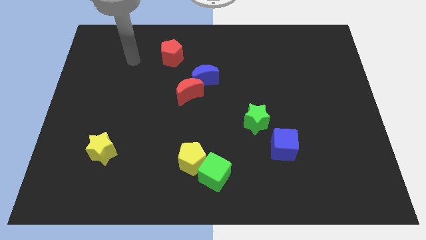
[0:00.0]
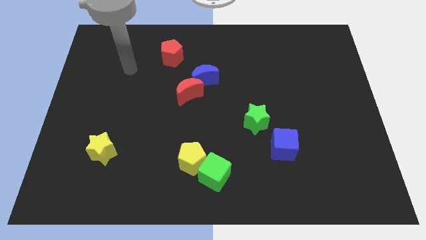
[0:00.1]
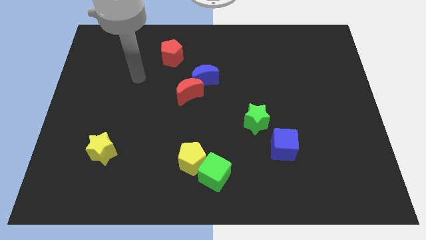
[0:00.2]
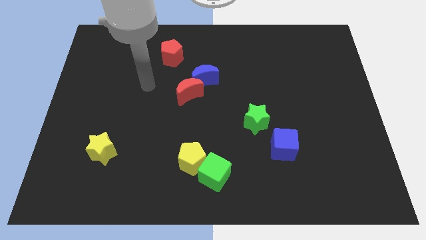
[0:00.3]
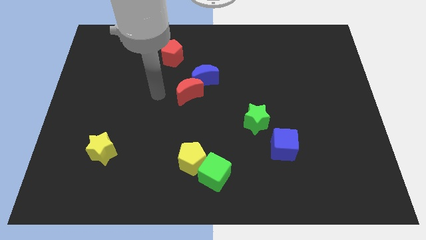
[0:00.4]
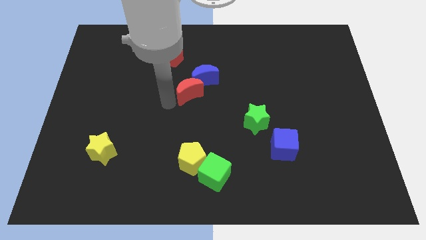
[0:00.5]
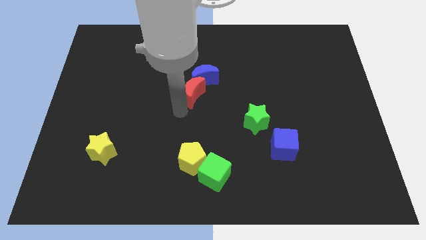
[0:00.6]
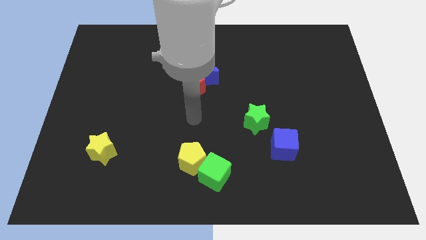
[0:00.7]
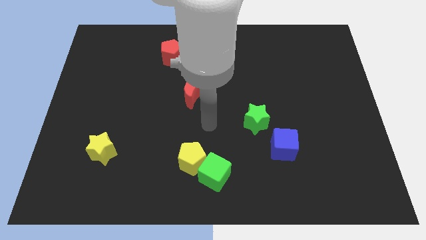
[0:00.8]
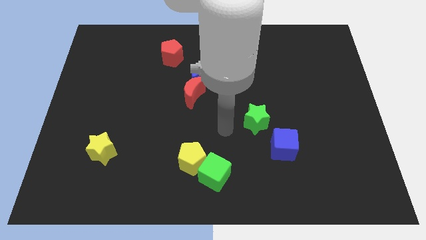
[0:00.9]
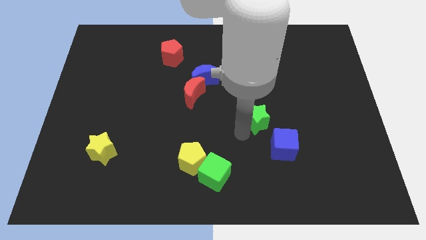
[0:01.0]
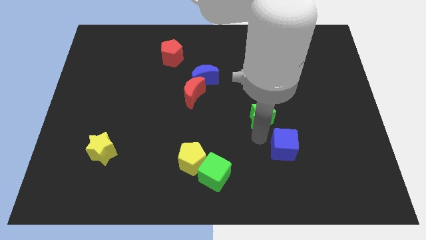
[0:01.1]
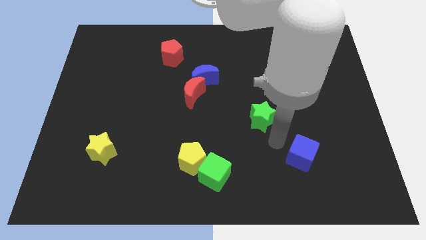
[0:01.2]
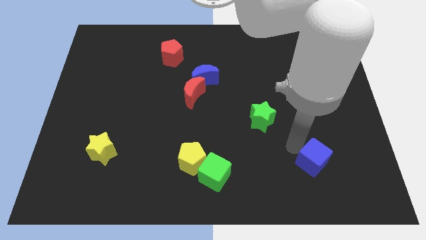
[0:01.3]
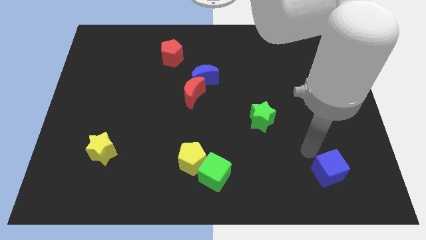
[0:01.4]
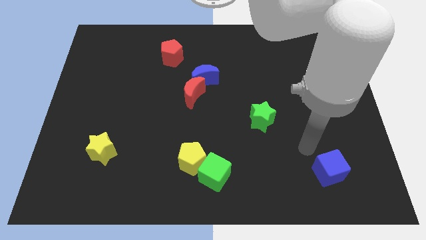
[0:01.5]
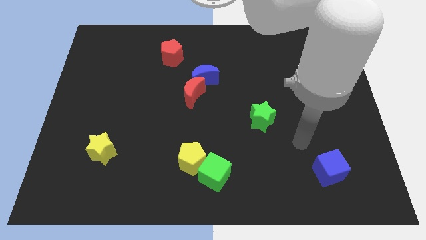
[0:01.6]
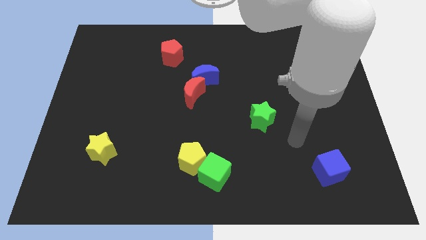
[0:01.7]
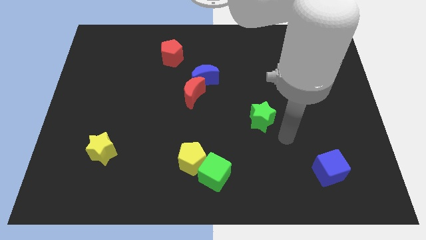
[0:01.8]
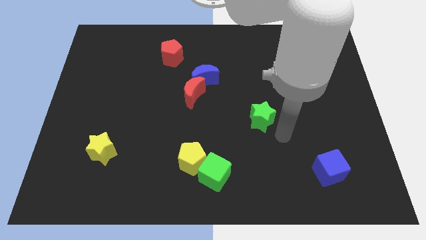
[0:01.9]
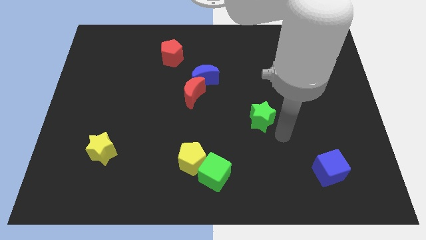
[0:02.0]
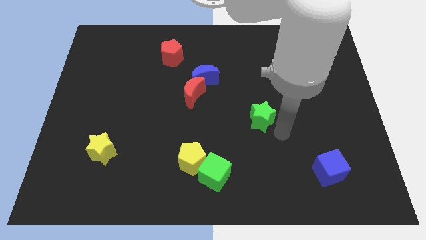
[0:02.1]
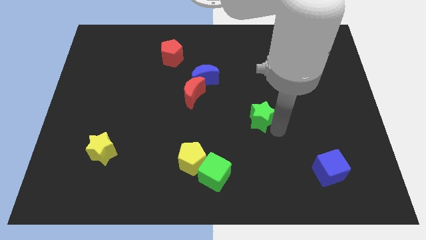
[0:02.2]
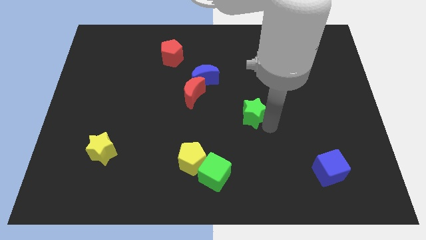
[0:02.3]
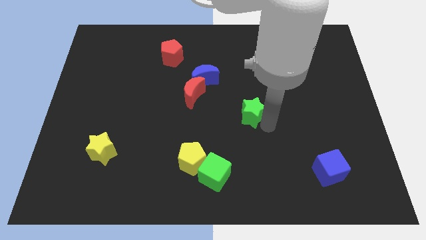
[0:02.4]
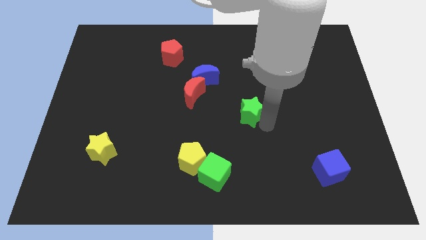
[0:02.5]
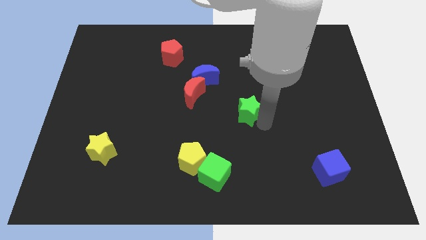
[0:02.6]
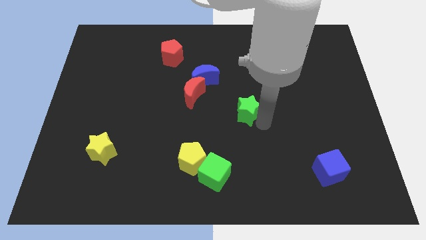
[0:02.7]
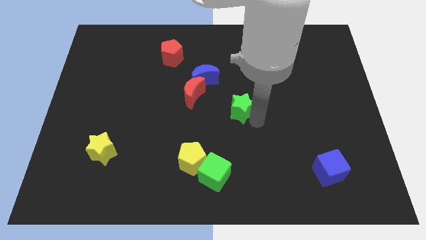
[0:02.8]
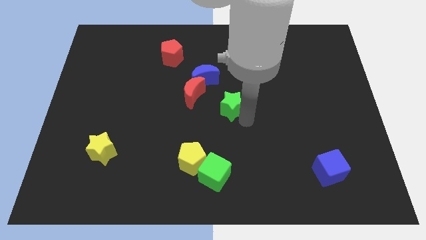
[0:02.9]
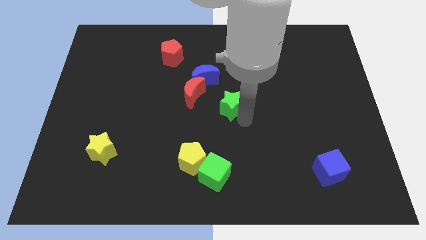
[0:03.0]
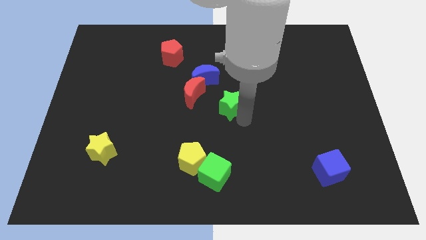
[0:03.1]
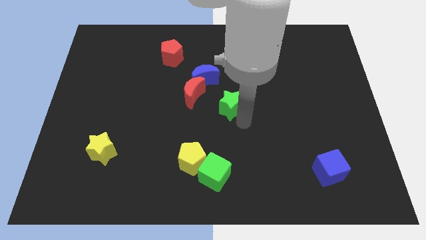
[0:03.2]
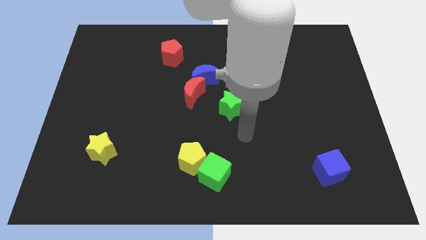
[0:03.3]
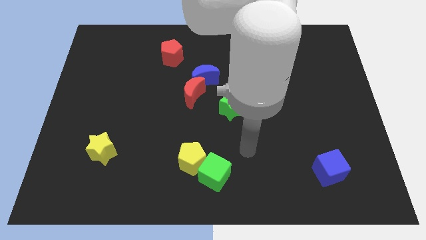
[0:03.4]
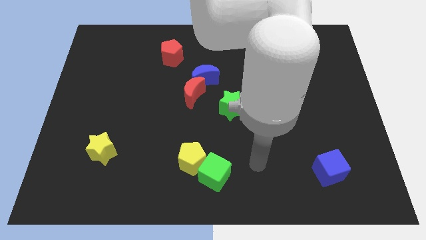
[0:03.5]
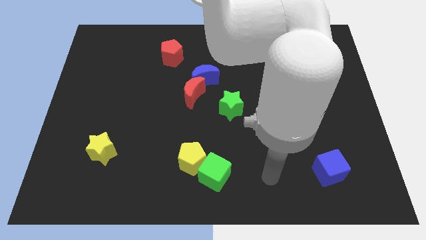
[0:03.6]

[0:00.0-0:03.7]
push the green star to the center of the board

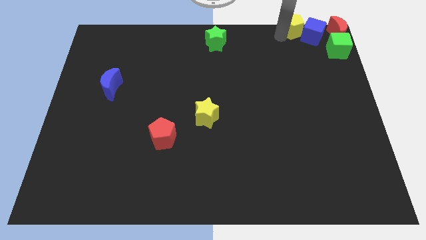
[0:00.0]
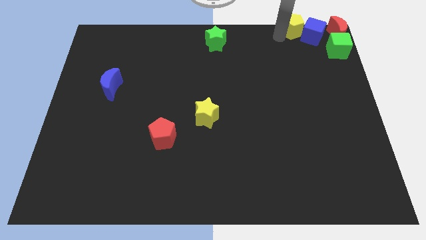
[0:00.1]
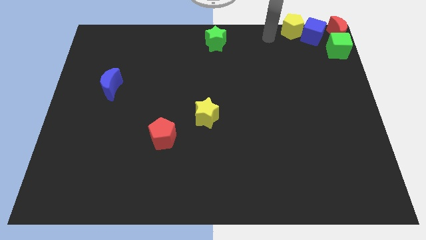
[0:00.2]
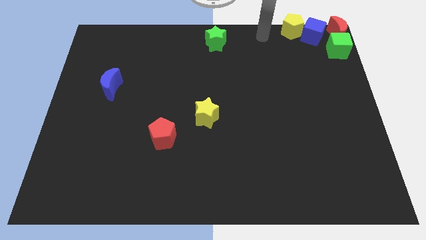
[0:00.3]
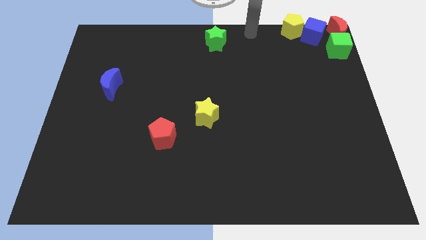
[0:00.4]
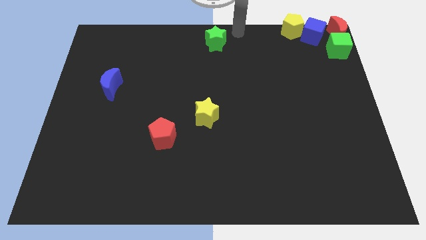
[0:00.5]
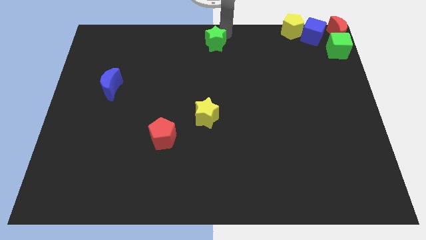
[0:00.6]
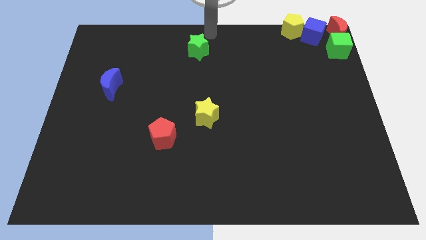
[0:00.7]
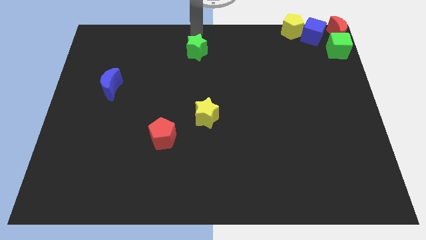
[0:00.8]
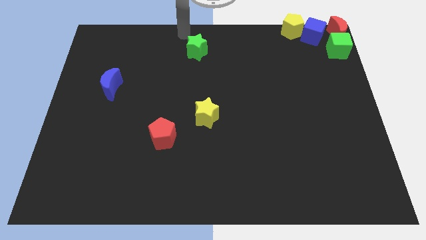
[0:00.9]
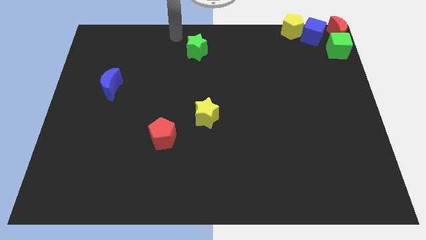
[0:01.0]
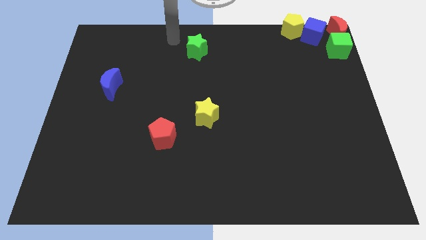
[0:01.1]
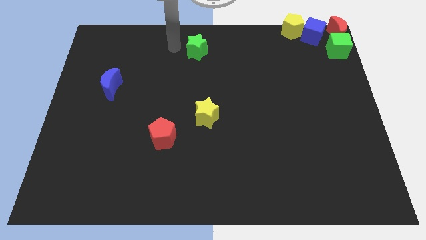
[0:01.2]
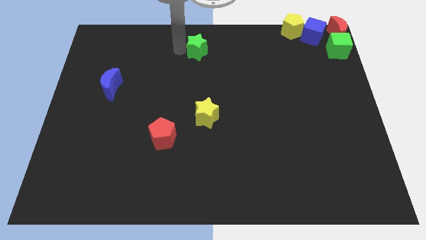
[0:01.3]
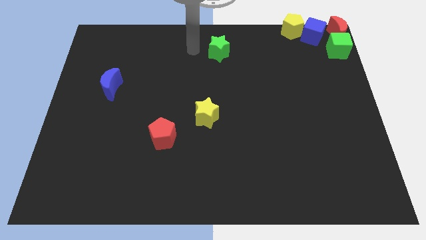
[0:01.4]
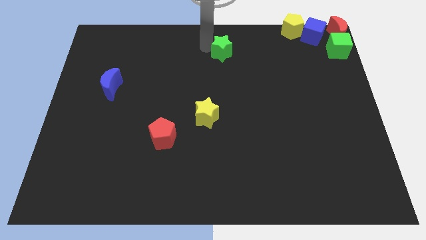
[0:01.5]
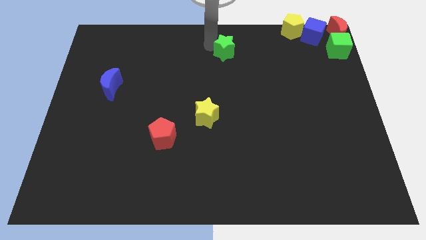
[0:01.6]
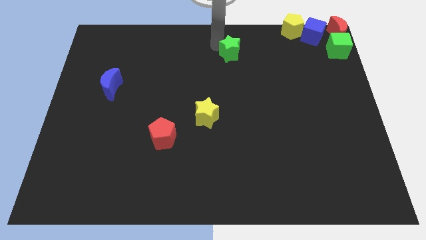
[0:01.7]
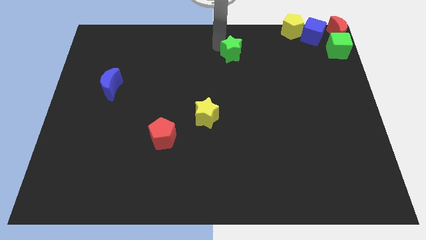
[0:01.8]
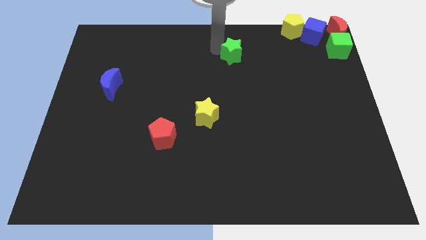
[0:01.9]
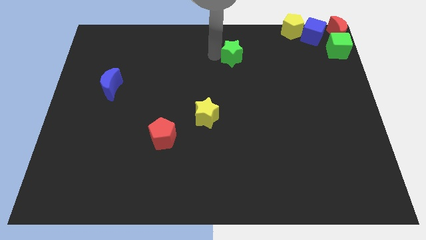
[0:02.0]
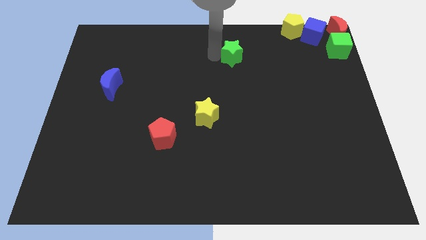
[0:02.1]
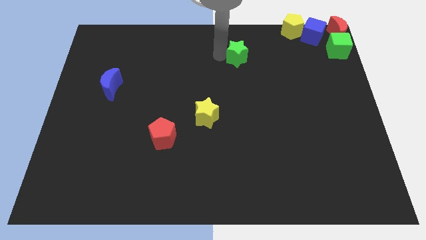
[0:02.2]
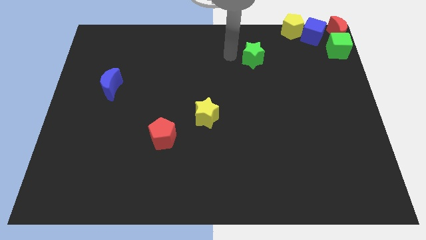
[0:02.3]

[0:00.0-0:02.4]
put green star diagonally in between yellow pentagon and yellow star

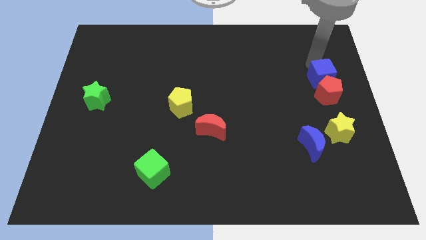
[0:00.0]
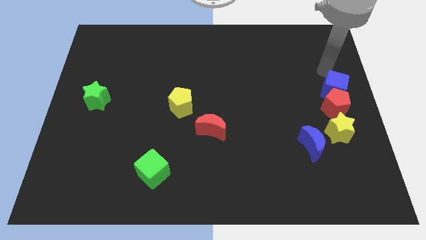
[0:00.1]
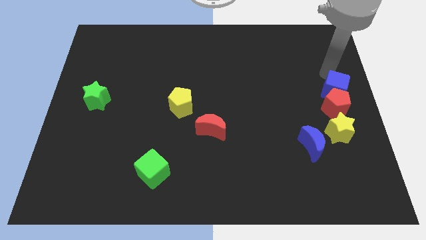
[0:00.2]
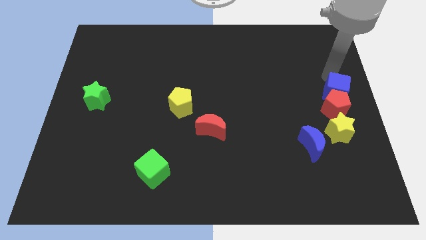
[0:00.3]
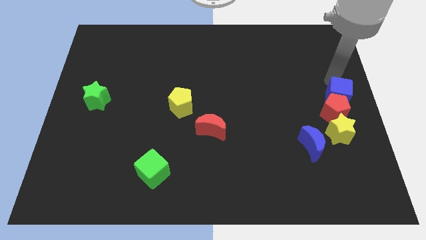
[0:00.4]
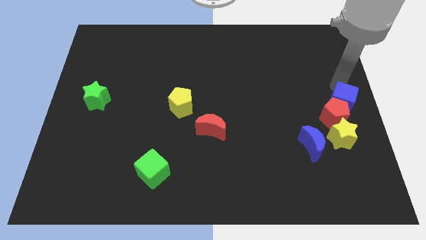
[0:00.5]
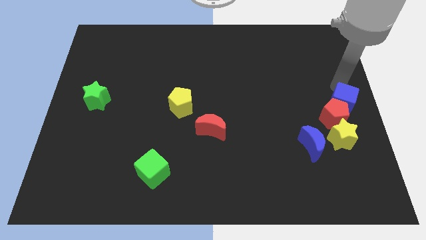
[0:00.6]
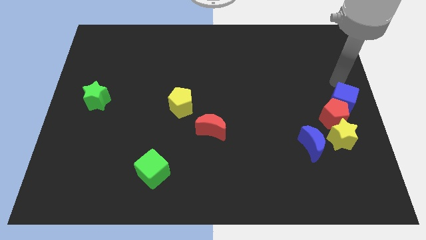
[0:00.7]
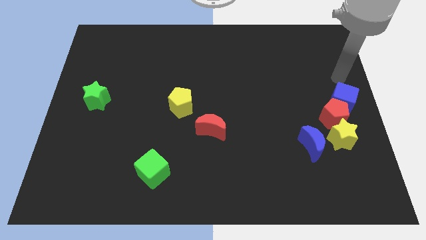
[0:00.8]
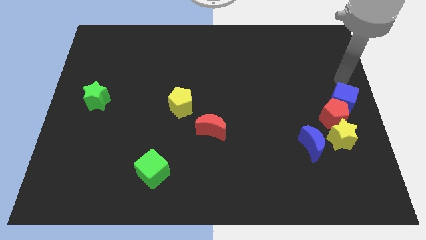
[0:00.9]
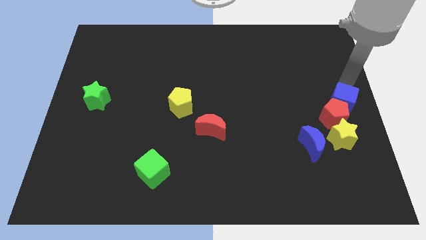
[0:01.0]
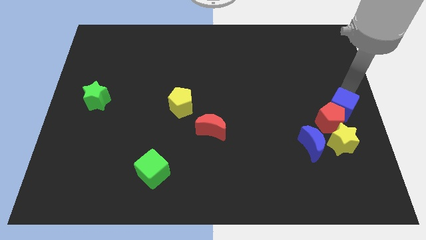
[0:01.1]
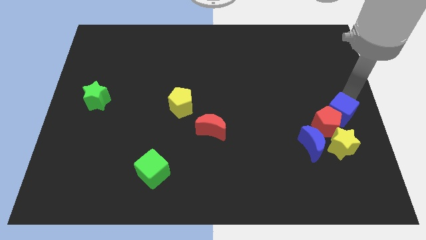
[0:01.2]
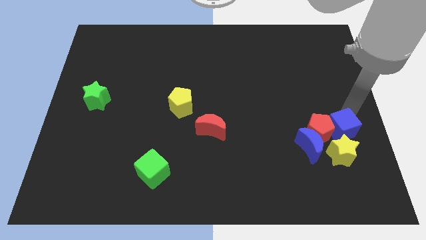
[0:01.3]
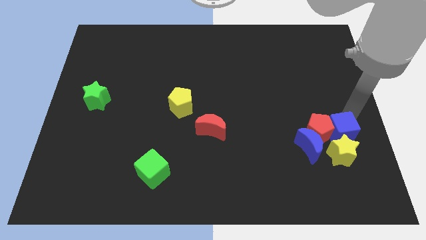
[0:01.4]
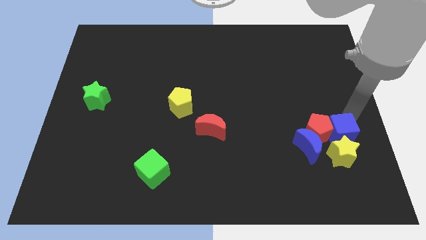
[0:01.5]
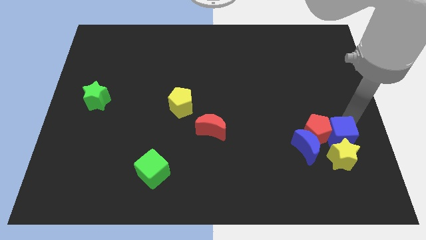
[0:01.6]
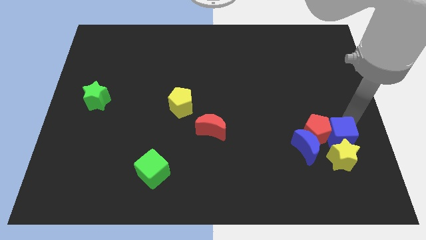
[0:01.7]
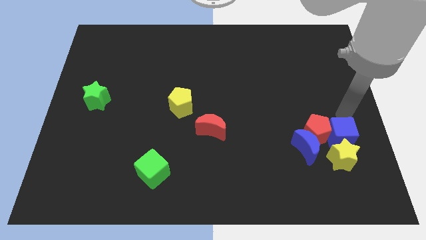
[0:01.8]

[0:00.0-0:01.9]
make a group of blue blocksred pentagon and yellow star

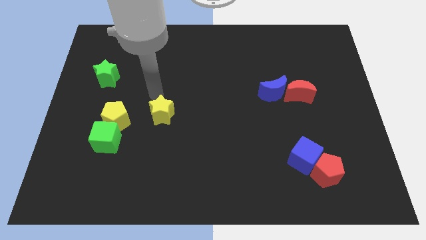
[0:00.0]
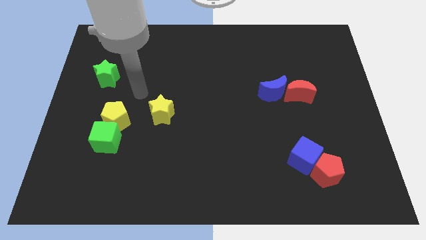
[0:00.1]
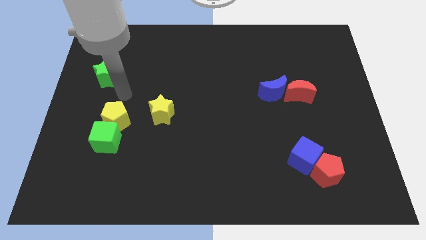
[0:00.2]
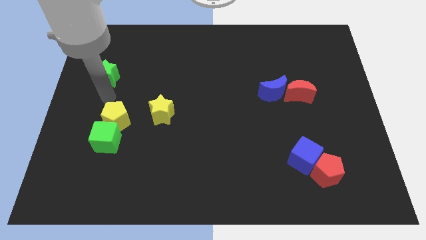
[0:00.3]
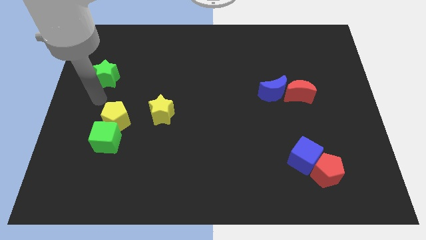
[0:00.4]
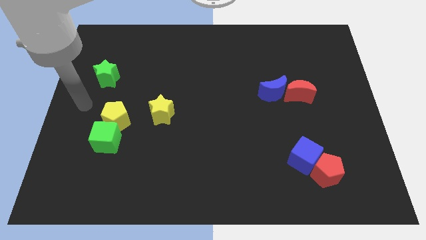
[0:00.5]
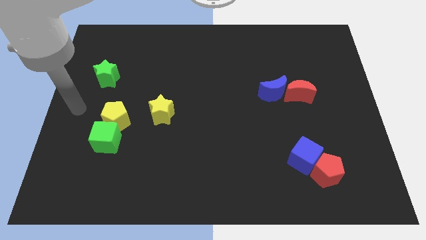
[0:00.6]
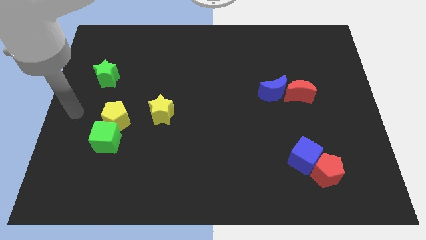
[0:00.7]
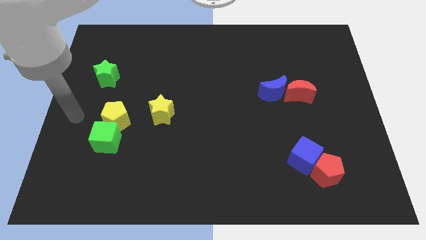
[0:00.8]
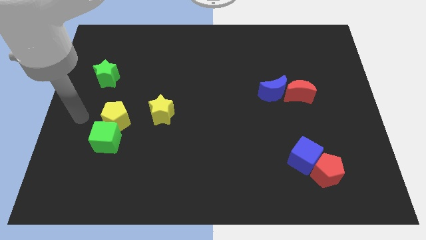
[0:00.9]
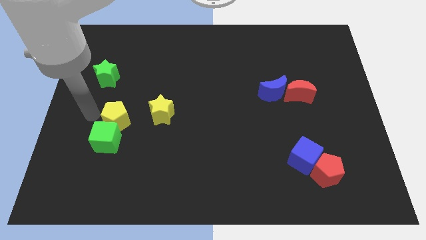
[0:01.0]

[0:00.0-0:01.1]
place your arm to the left side of yellow pentagon
